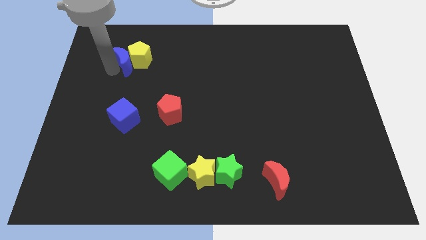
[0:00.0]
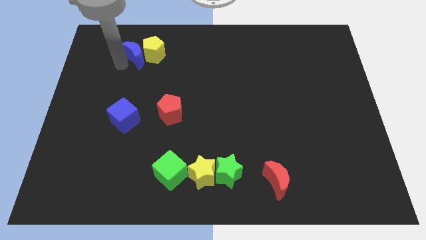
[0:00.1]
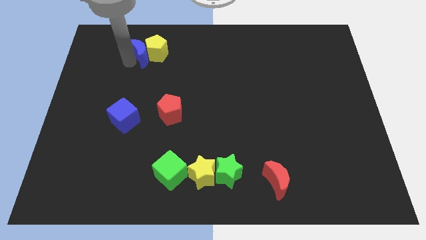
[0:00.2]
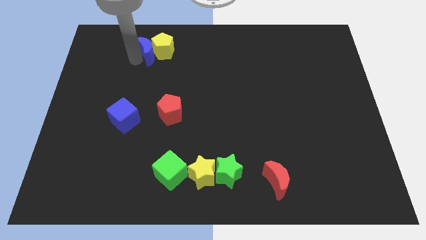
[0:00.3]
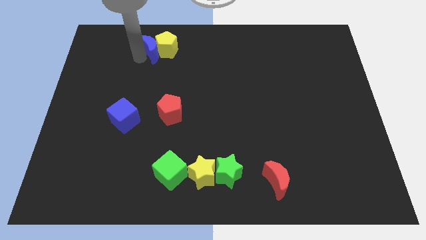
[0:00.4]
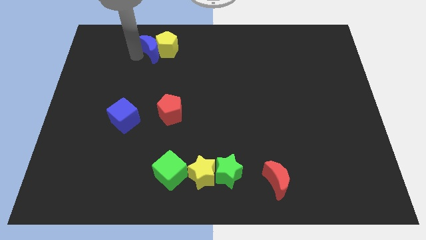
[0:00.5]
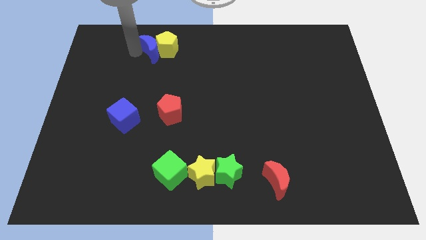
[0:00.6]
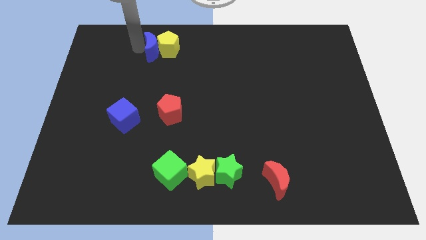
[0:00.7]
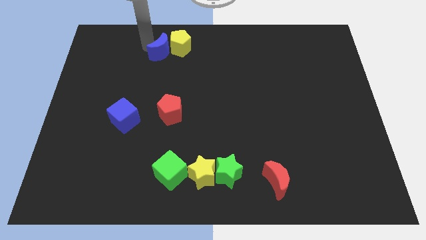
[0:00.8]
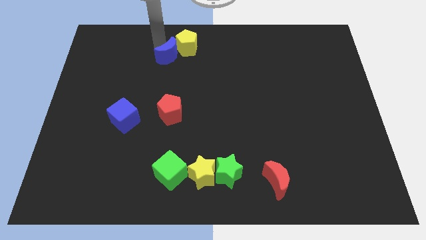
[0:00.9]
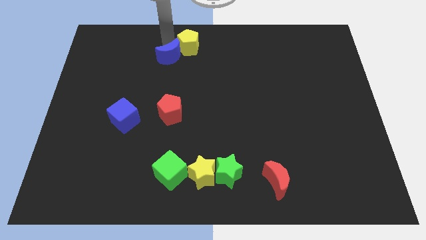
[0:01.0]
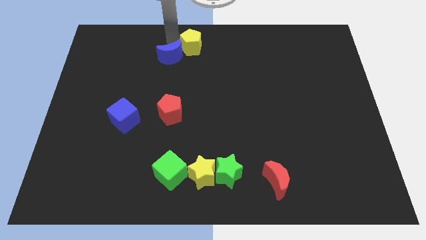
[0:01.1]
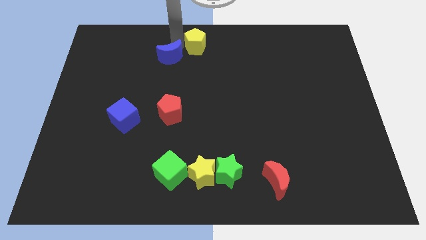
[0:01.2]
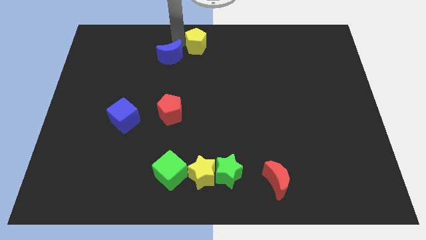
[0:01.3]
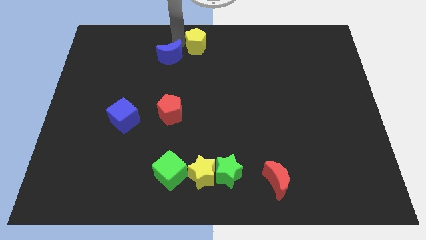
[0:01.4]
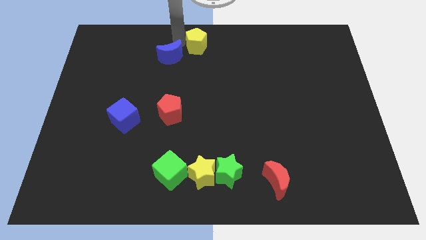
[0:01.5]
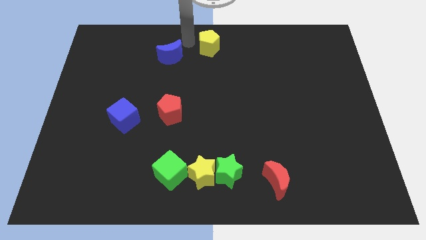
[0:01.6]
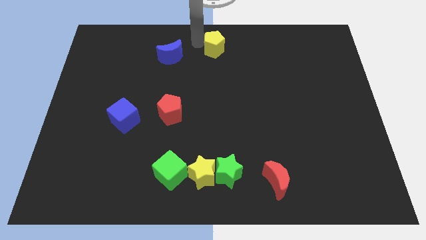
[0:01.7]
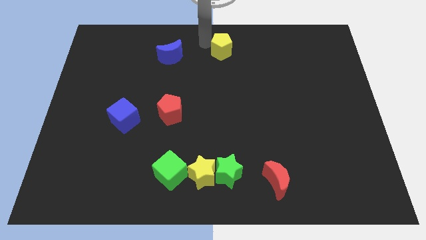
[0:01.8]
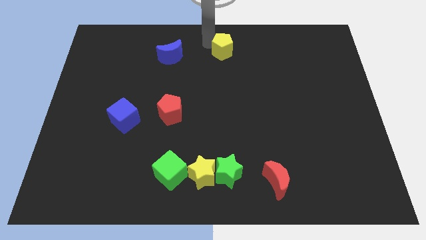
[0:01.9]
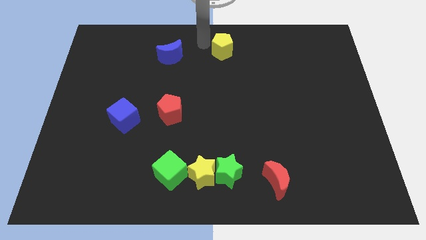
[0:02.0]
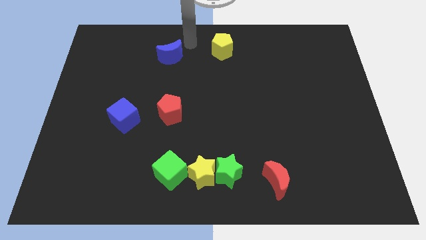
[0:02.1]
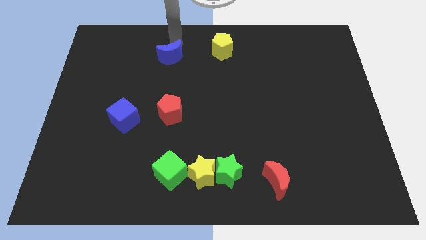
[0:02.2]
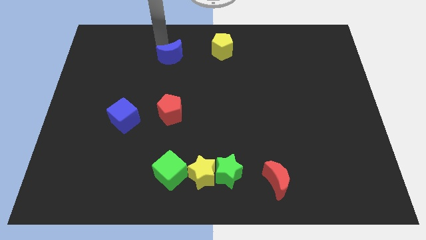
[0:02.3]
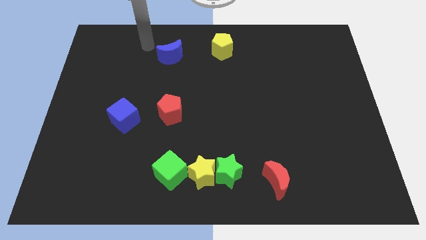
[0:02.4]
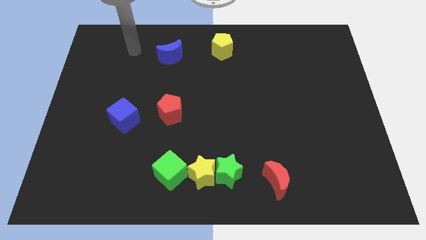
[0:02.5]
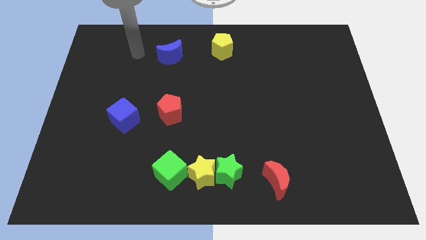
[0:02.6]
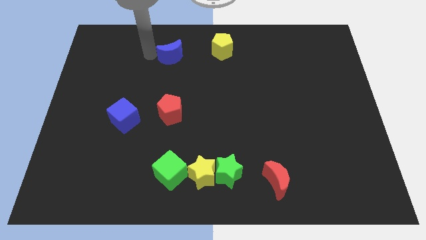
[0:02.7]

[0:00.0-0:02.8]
separate the blue moon and yellow pentagon

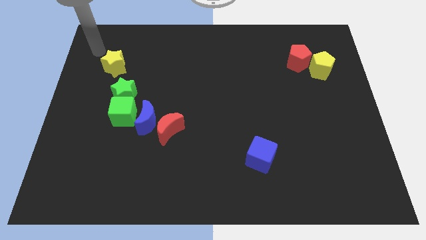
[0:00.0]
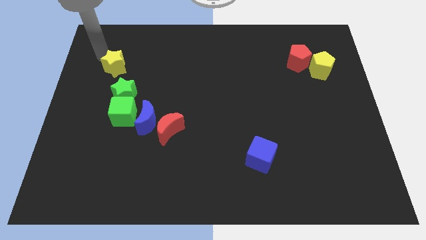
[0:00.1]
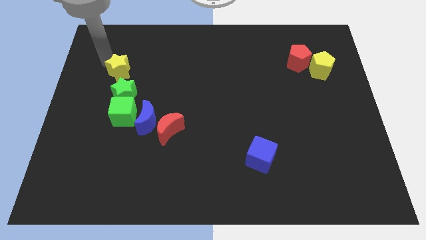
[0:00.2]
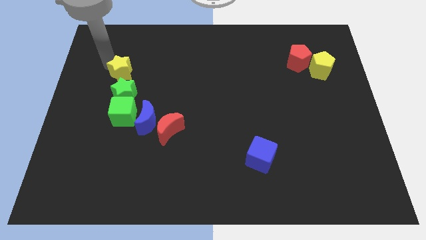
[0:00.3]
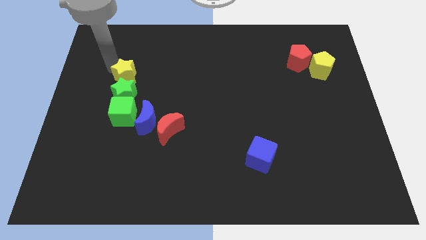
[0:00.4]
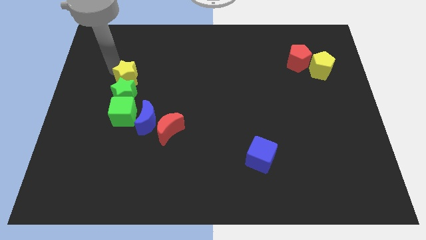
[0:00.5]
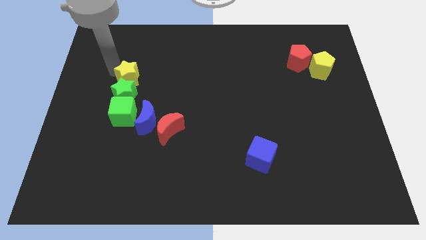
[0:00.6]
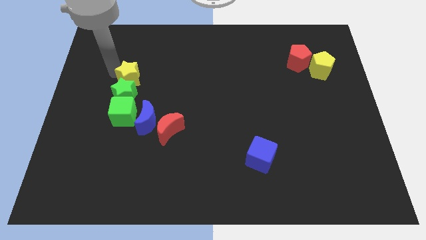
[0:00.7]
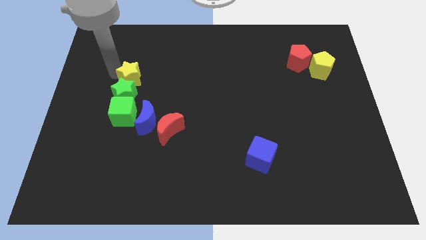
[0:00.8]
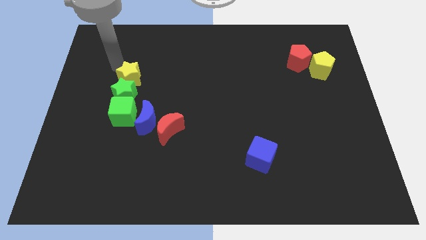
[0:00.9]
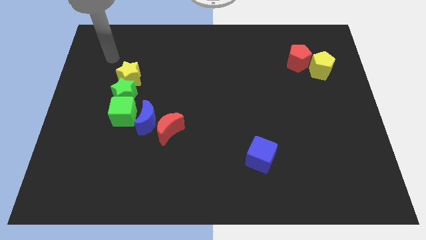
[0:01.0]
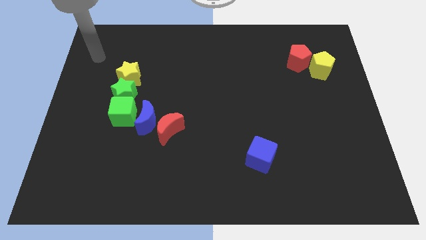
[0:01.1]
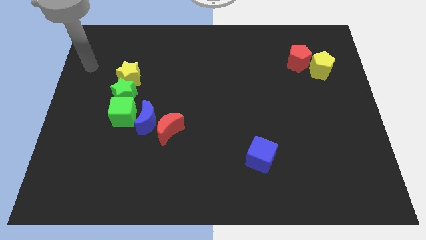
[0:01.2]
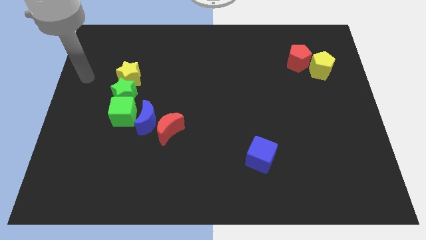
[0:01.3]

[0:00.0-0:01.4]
place the yellow star into top of the green star

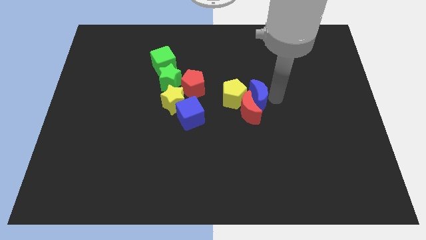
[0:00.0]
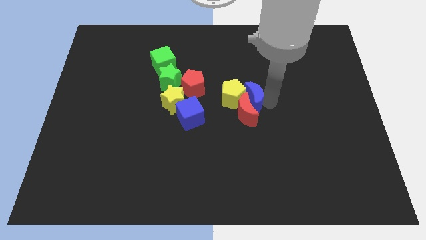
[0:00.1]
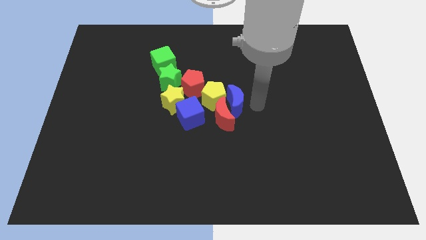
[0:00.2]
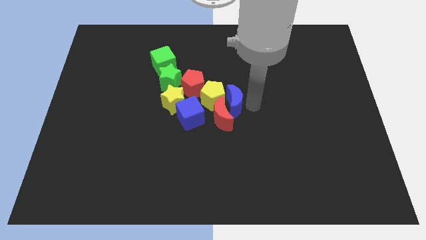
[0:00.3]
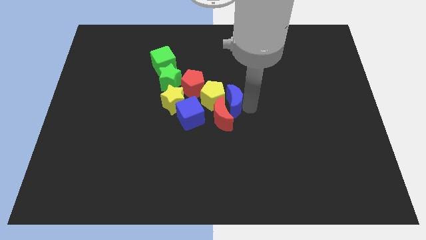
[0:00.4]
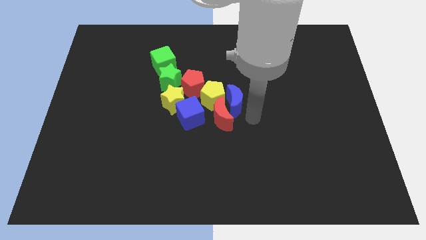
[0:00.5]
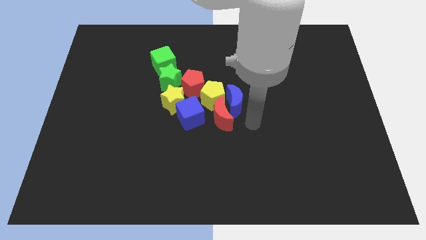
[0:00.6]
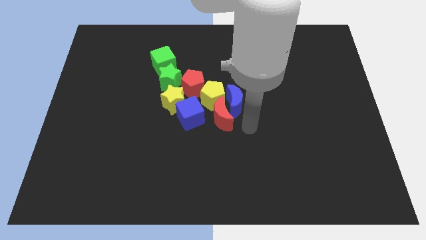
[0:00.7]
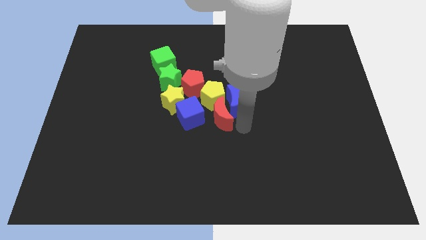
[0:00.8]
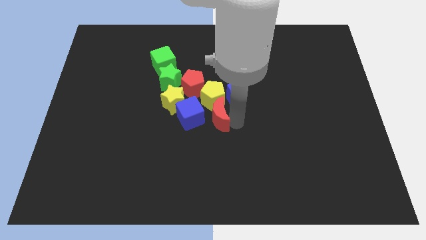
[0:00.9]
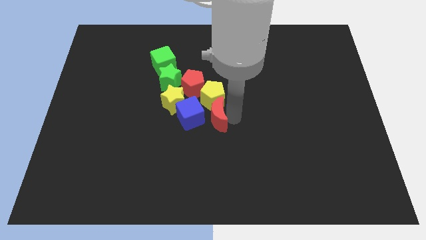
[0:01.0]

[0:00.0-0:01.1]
push both the crescents into the group of the blocks

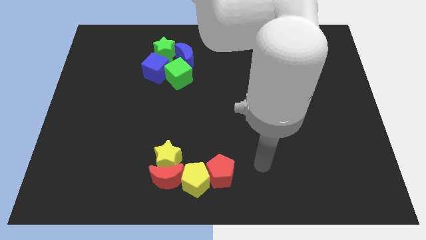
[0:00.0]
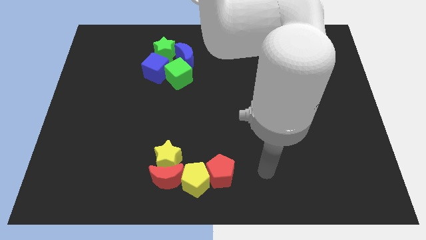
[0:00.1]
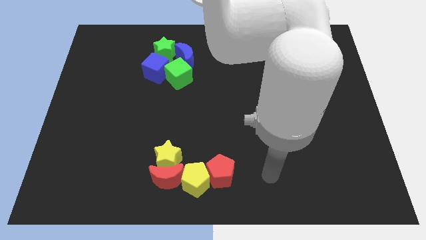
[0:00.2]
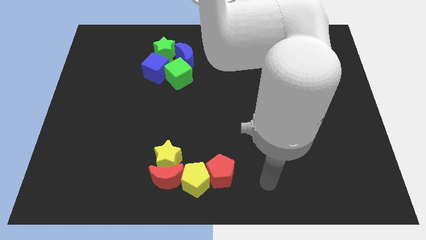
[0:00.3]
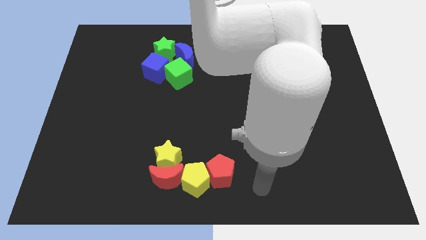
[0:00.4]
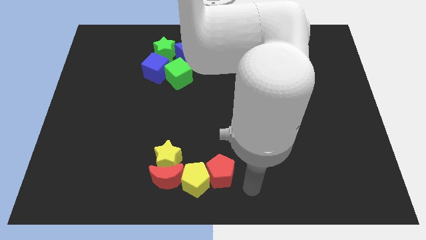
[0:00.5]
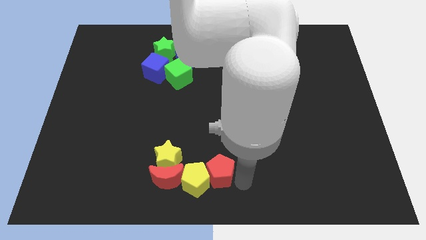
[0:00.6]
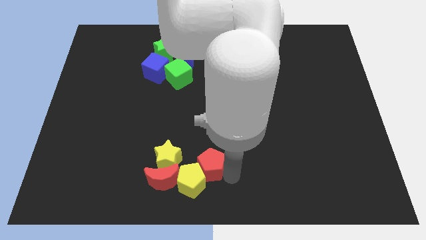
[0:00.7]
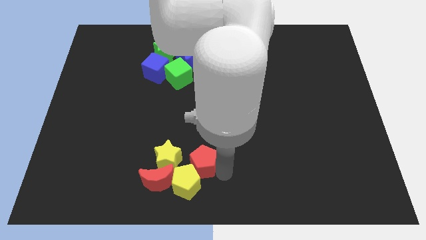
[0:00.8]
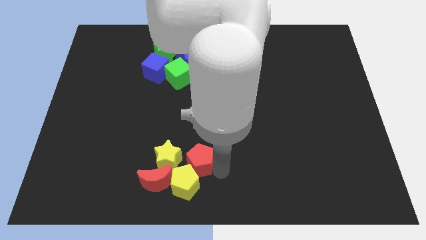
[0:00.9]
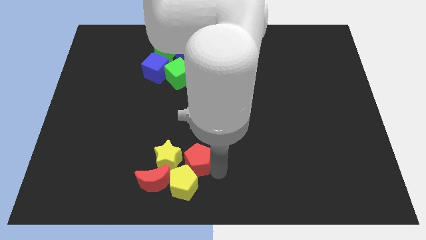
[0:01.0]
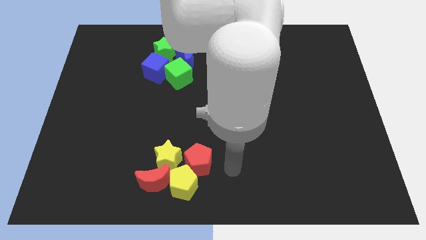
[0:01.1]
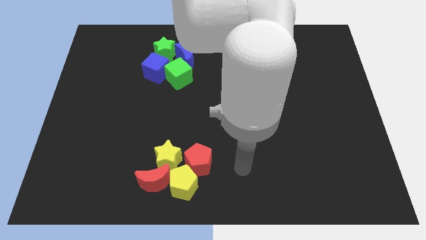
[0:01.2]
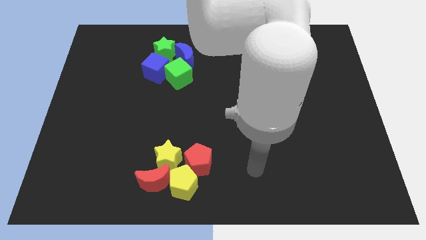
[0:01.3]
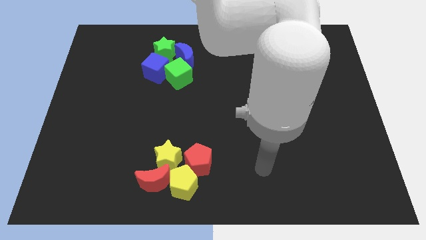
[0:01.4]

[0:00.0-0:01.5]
place red pentagon to the right side of the yellow star

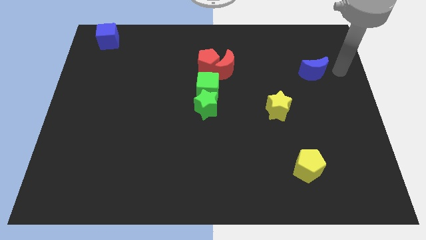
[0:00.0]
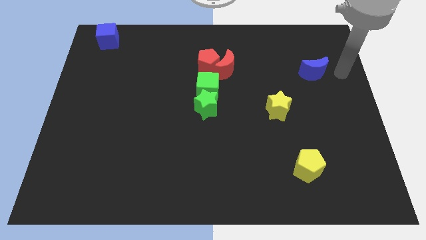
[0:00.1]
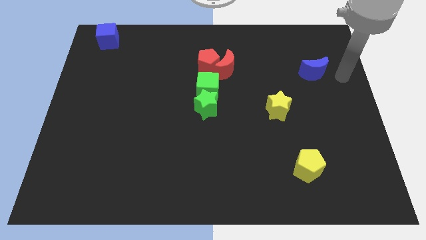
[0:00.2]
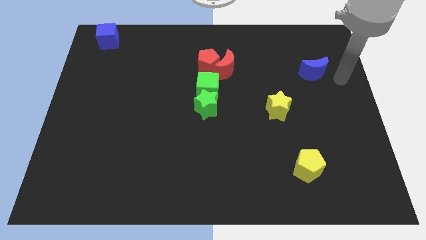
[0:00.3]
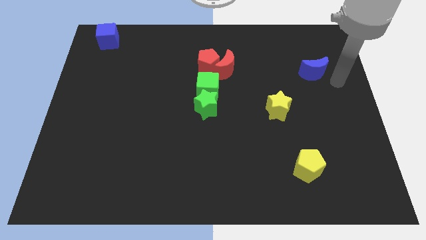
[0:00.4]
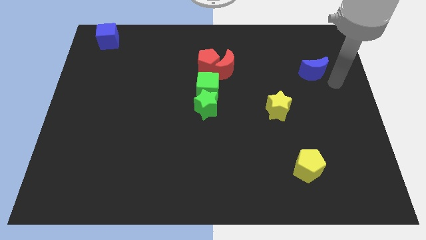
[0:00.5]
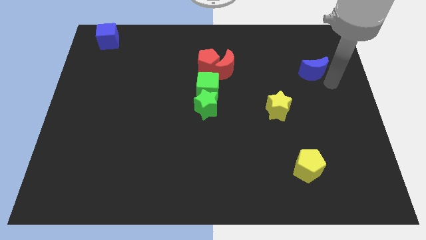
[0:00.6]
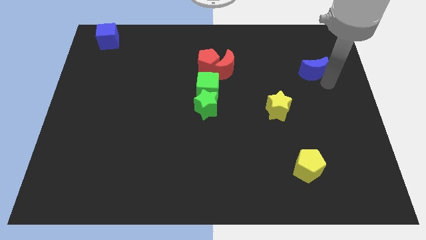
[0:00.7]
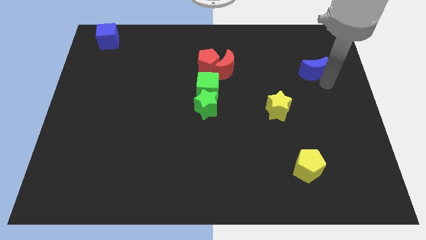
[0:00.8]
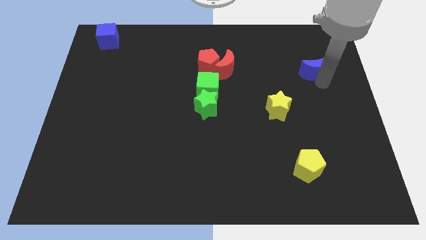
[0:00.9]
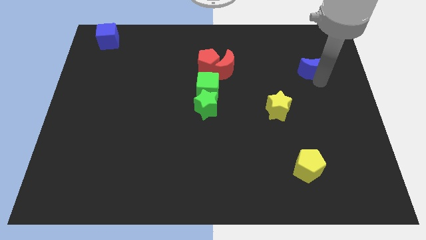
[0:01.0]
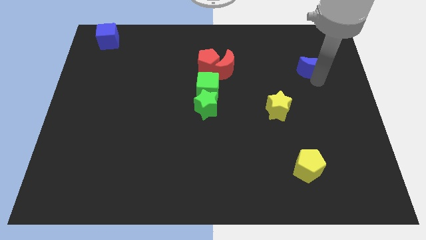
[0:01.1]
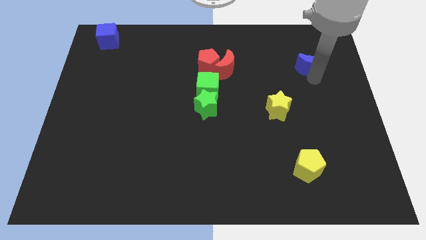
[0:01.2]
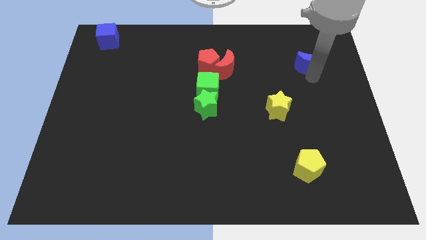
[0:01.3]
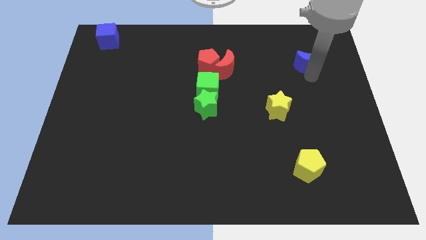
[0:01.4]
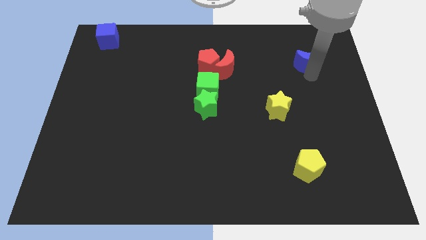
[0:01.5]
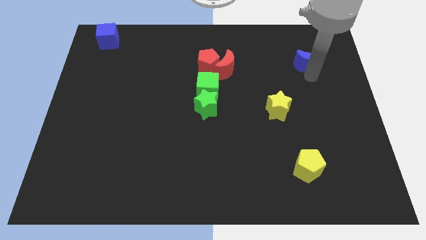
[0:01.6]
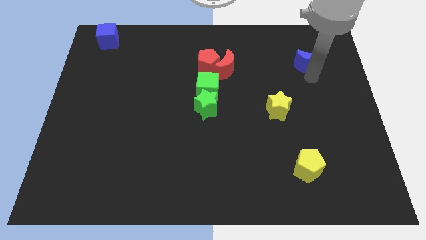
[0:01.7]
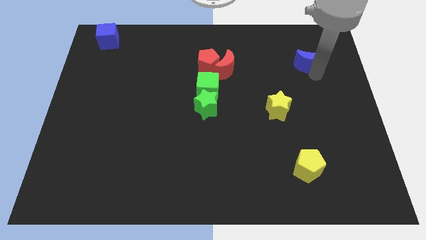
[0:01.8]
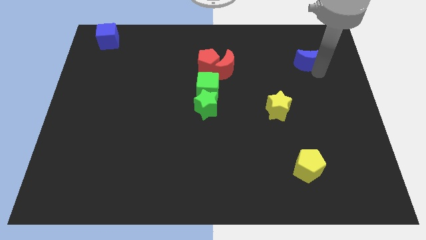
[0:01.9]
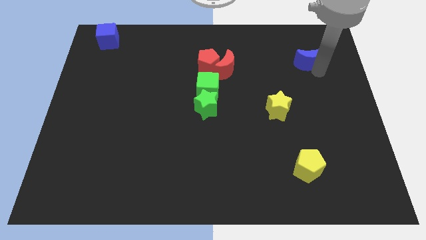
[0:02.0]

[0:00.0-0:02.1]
push the blue moon slightly up

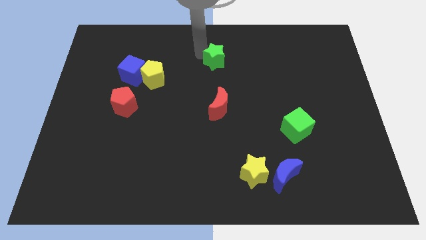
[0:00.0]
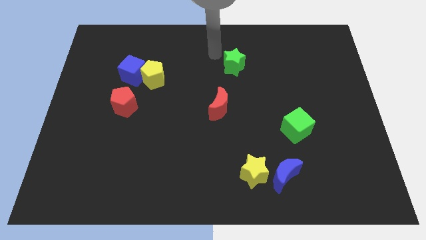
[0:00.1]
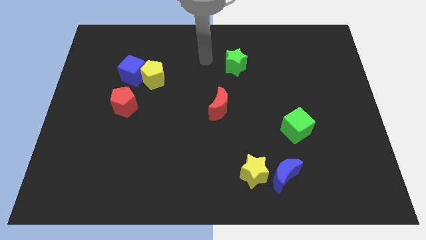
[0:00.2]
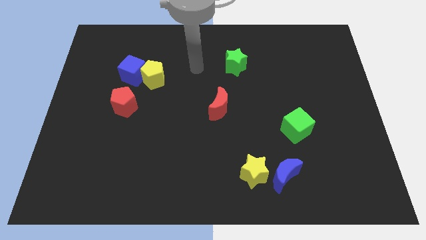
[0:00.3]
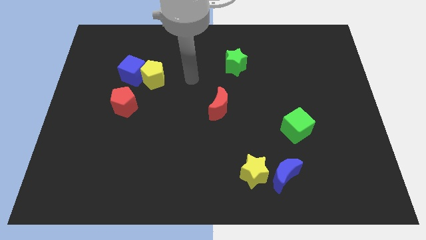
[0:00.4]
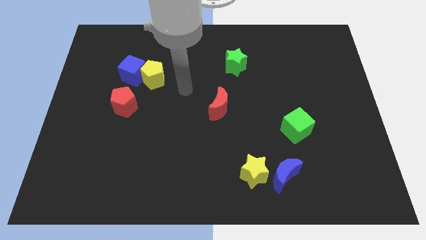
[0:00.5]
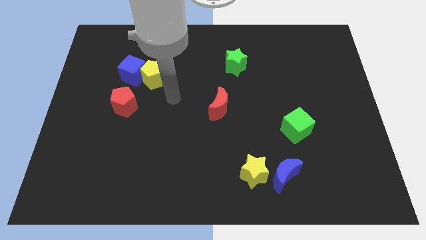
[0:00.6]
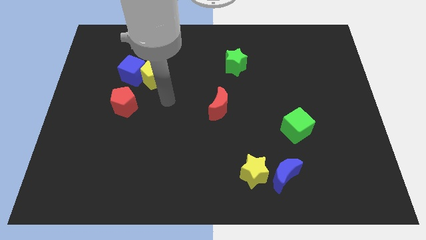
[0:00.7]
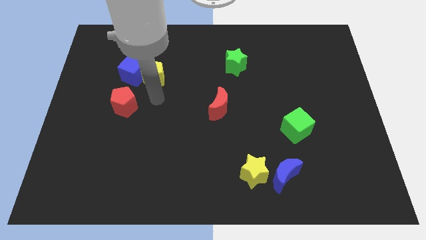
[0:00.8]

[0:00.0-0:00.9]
move your arm away from the green star
